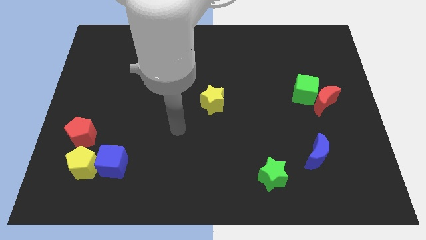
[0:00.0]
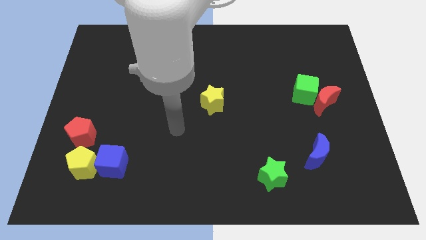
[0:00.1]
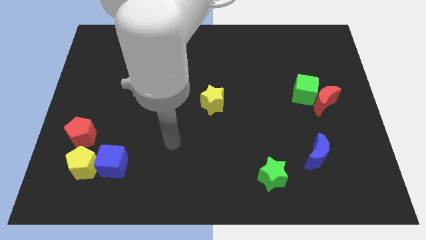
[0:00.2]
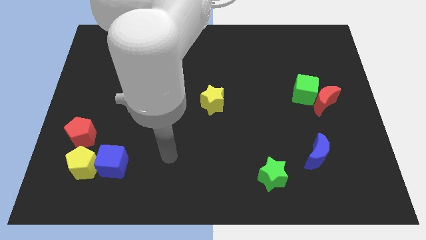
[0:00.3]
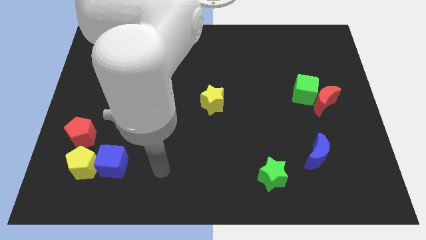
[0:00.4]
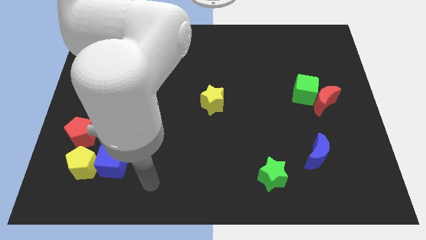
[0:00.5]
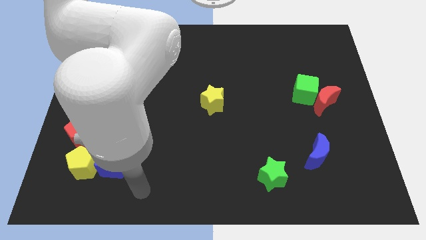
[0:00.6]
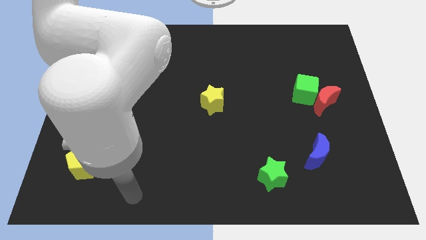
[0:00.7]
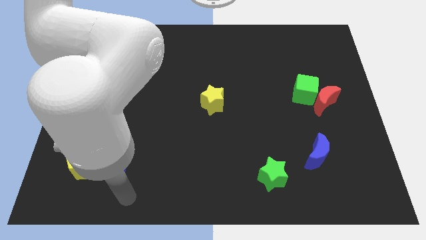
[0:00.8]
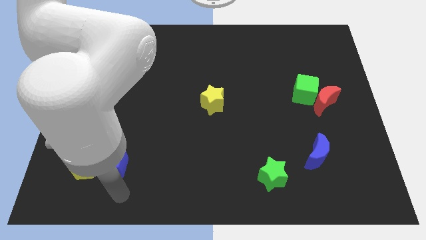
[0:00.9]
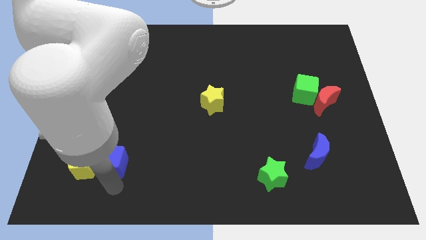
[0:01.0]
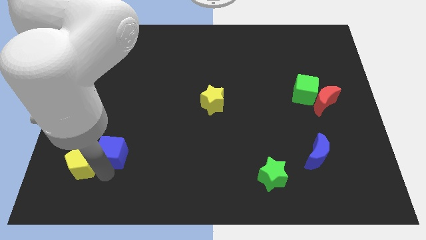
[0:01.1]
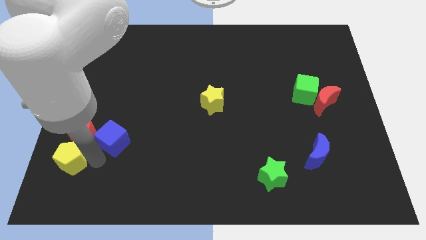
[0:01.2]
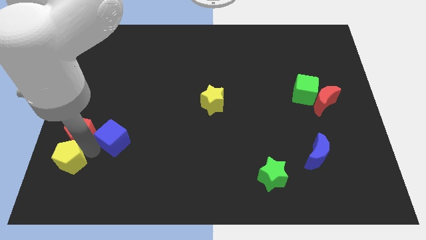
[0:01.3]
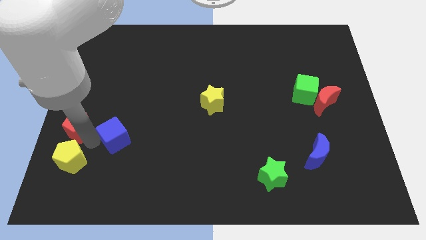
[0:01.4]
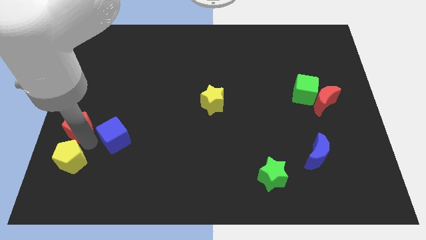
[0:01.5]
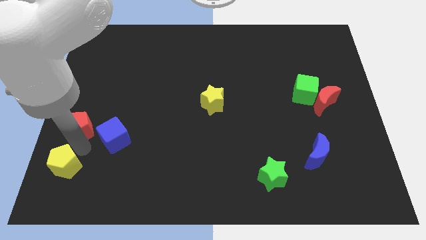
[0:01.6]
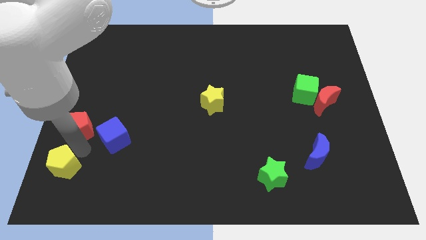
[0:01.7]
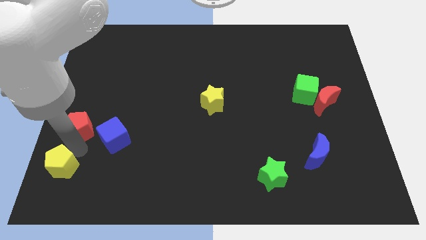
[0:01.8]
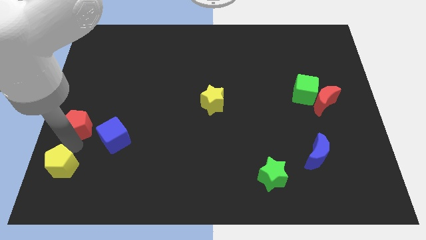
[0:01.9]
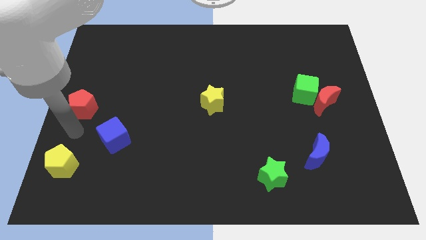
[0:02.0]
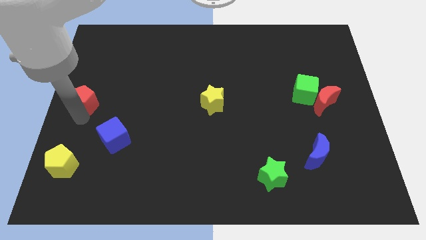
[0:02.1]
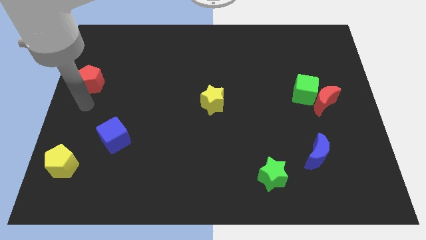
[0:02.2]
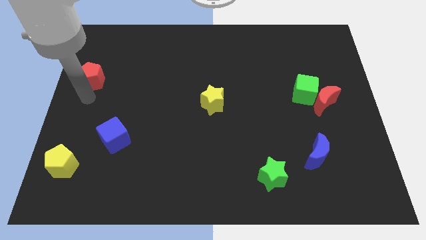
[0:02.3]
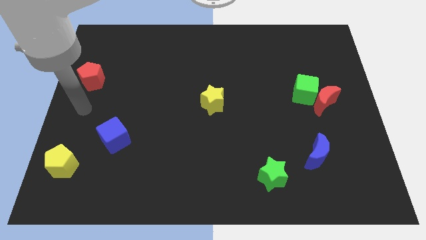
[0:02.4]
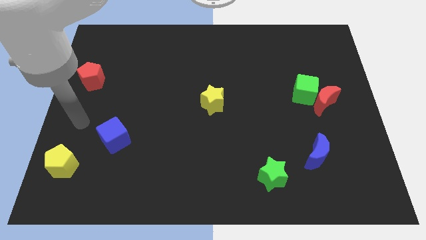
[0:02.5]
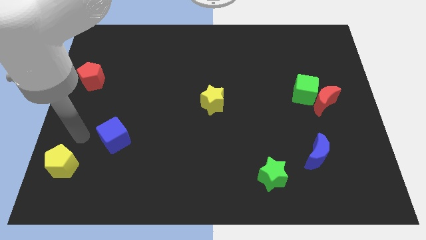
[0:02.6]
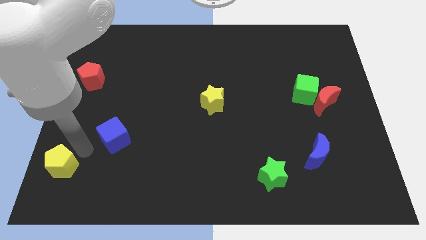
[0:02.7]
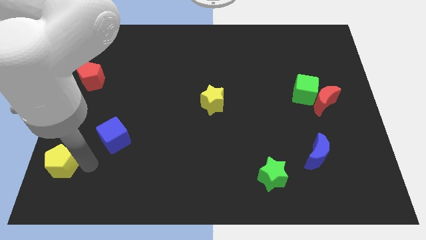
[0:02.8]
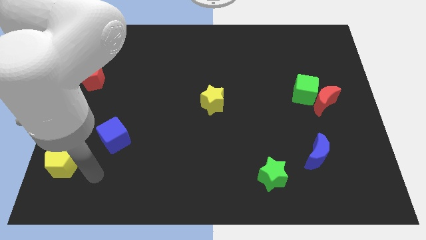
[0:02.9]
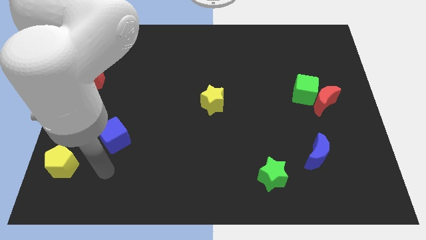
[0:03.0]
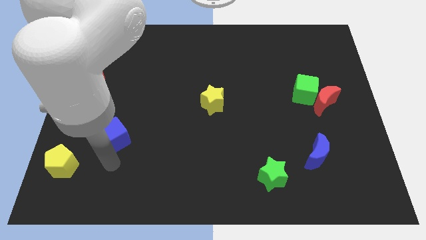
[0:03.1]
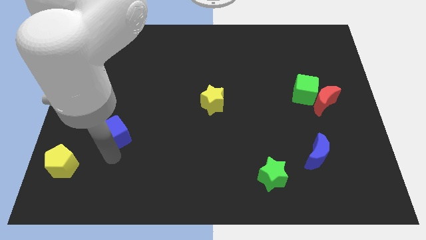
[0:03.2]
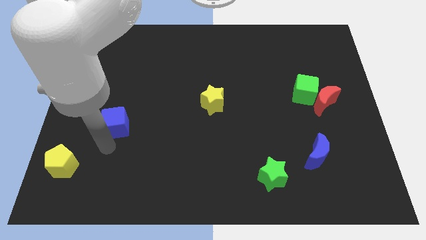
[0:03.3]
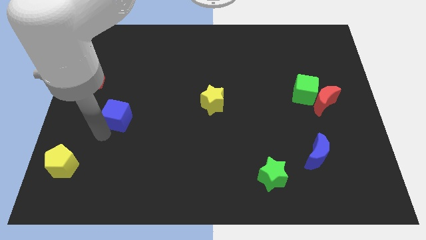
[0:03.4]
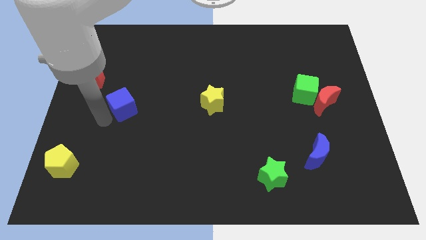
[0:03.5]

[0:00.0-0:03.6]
separate red pentagon blue cube yellow pentagon from each other

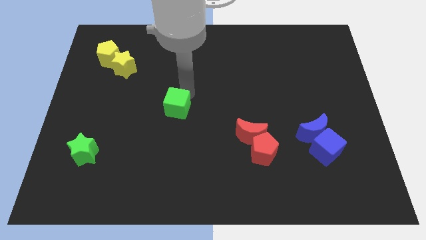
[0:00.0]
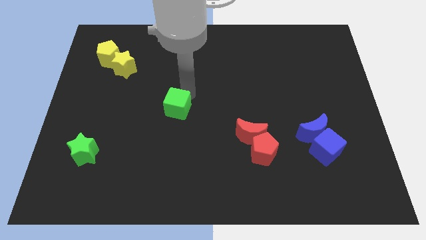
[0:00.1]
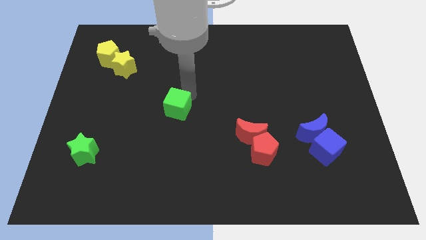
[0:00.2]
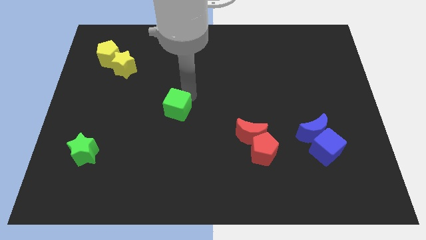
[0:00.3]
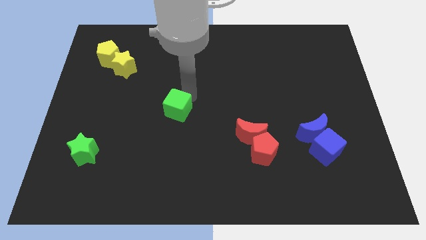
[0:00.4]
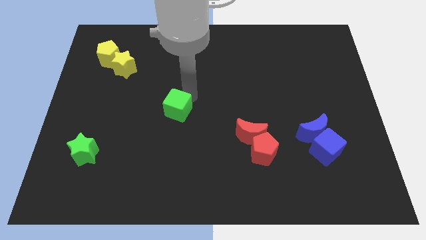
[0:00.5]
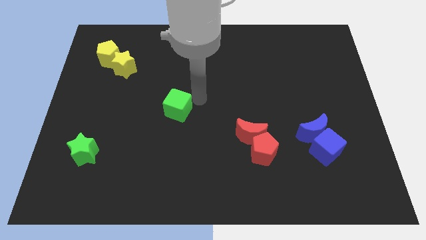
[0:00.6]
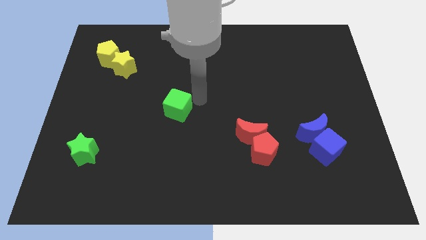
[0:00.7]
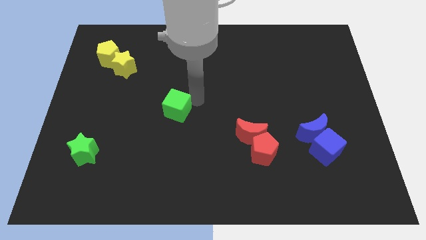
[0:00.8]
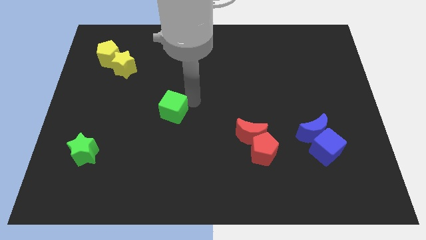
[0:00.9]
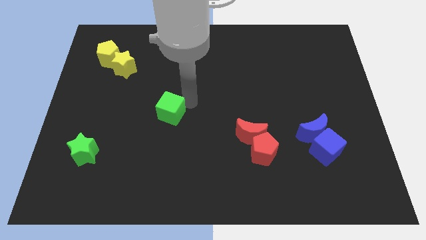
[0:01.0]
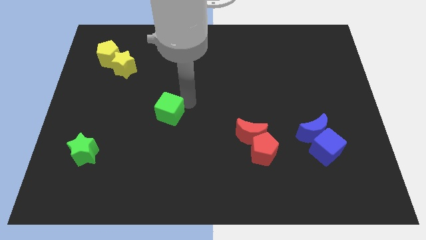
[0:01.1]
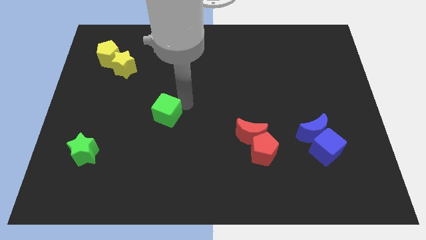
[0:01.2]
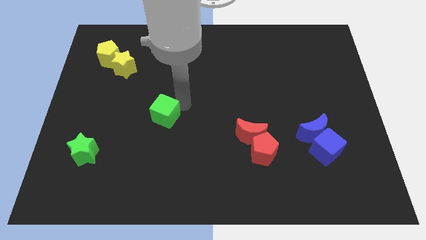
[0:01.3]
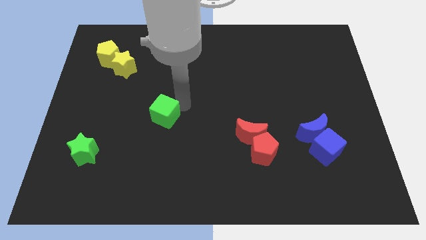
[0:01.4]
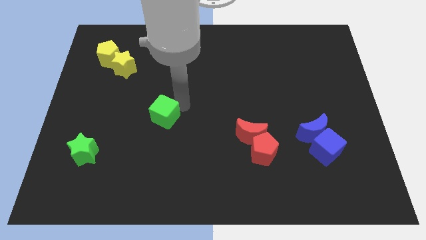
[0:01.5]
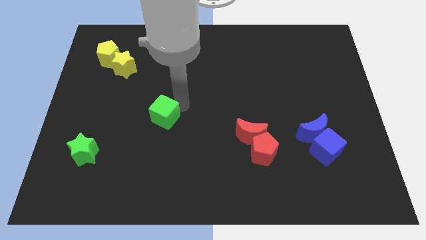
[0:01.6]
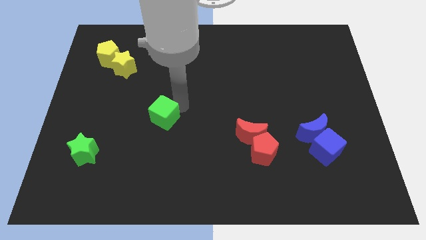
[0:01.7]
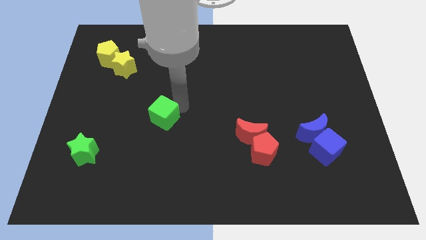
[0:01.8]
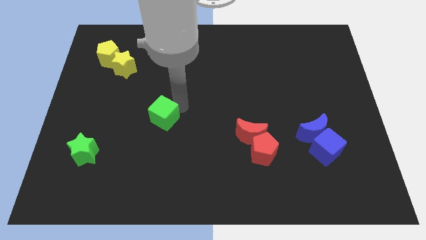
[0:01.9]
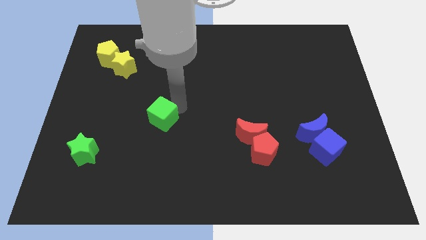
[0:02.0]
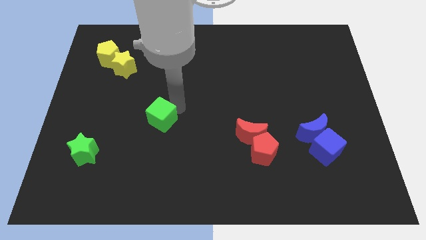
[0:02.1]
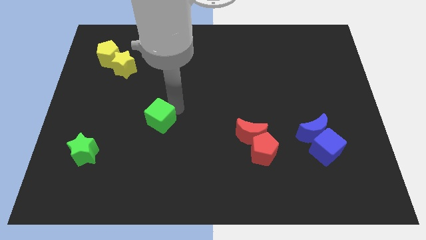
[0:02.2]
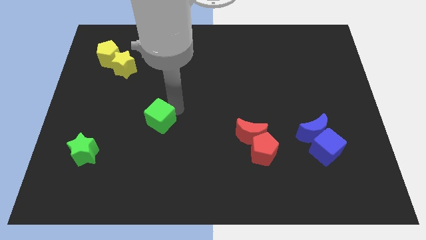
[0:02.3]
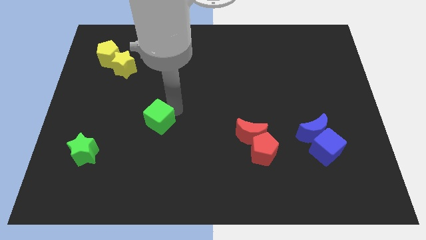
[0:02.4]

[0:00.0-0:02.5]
push green cube towards green star

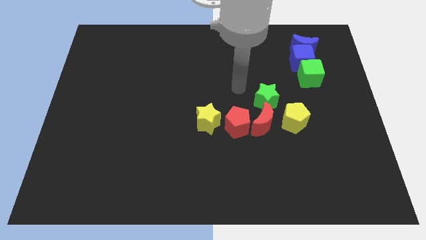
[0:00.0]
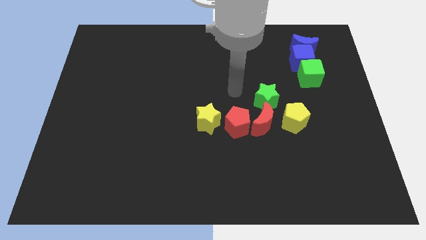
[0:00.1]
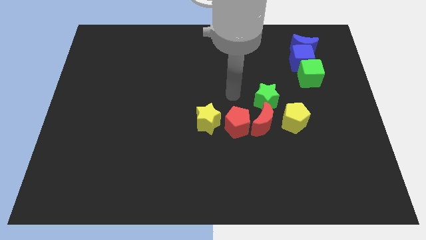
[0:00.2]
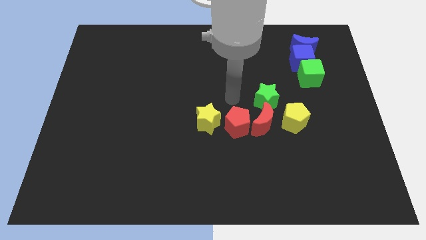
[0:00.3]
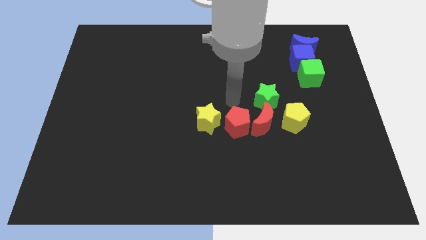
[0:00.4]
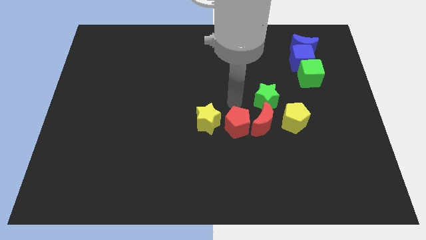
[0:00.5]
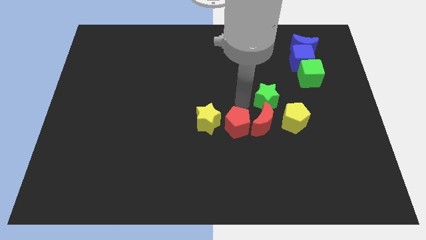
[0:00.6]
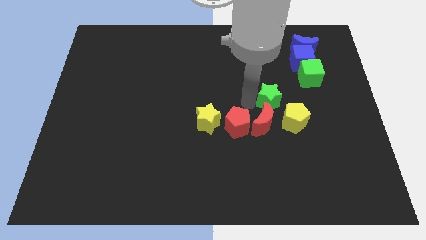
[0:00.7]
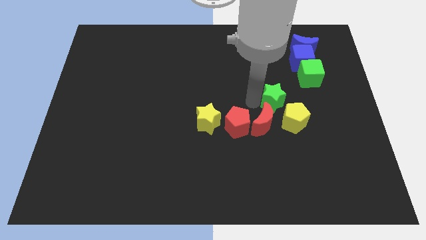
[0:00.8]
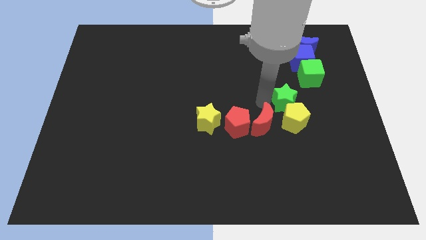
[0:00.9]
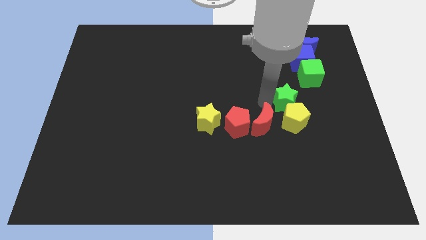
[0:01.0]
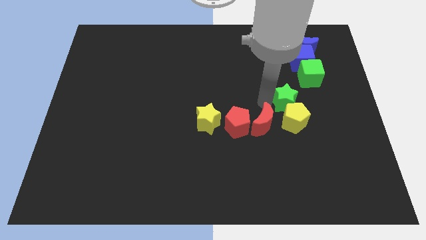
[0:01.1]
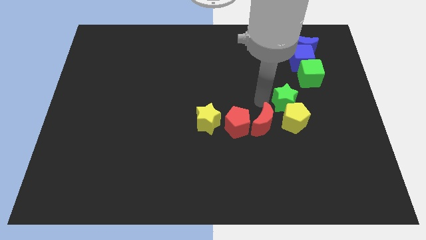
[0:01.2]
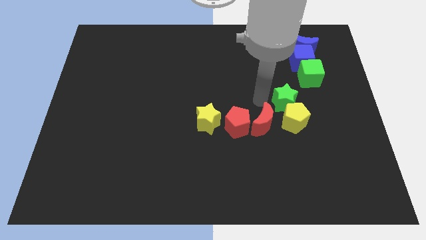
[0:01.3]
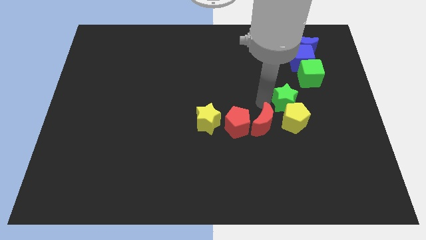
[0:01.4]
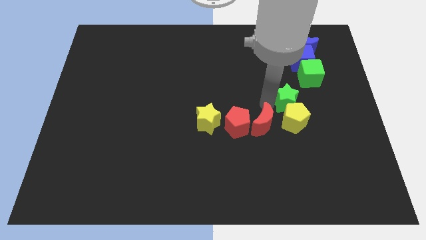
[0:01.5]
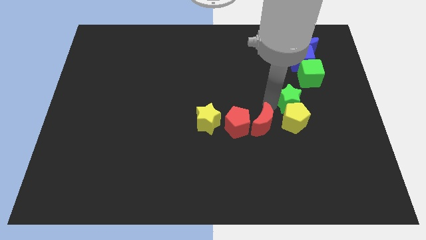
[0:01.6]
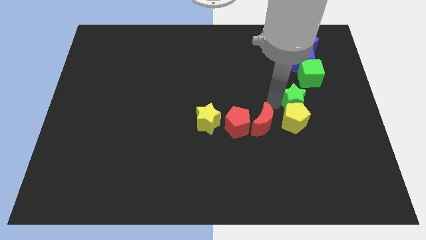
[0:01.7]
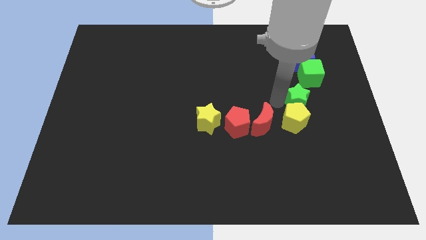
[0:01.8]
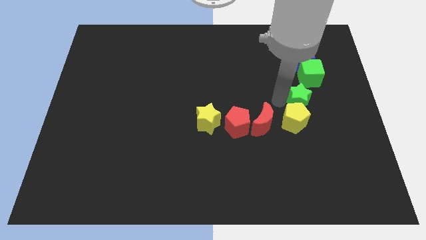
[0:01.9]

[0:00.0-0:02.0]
place the green star above the yellow pentagon

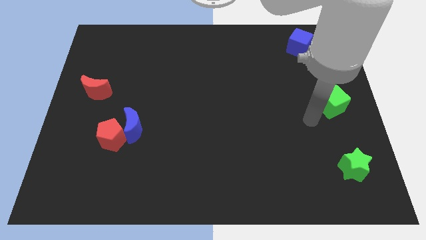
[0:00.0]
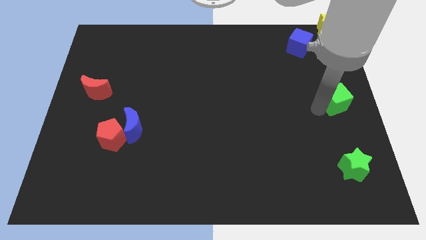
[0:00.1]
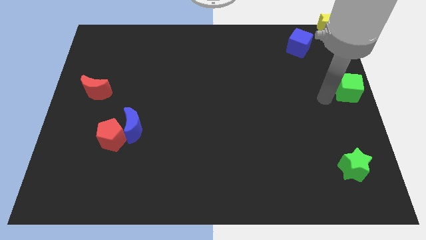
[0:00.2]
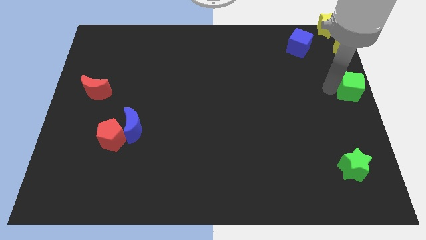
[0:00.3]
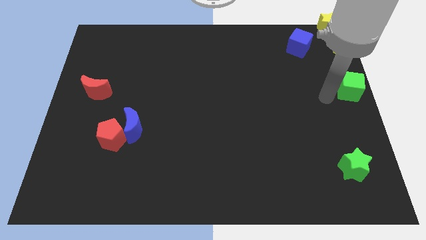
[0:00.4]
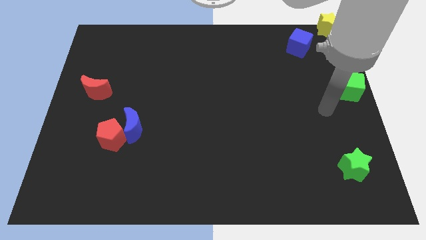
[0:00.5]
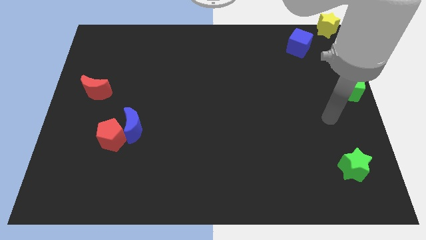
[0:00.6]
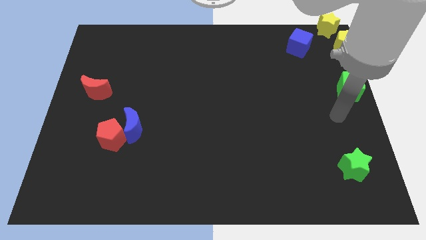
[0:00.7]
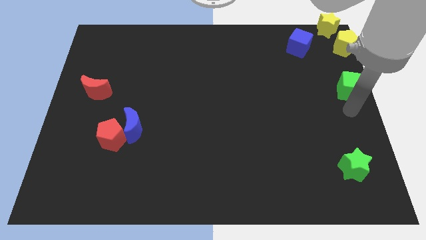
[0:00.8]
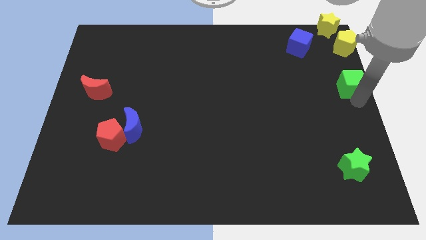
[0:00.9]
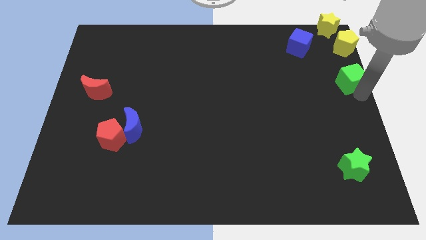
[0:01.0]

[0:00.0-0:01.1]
move green cube below the yellow pentagon
